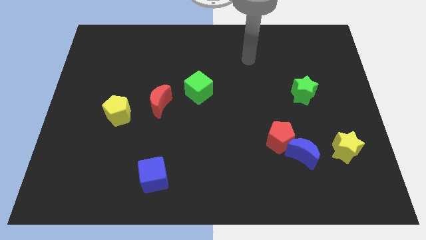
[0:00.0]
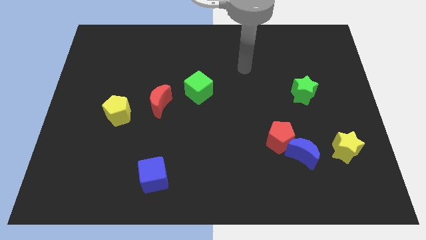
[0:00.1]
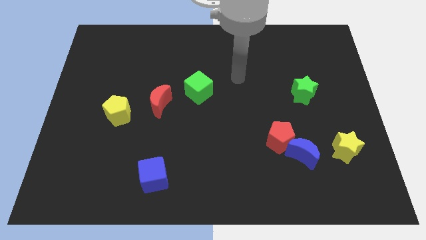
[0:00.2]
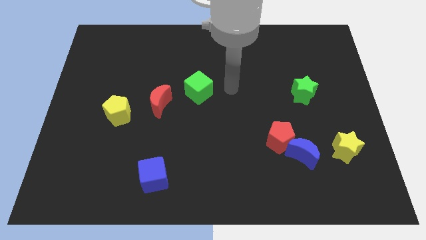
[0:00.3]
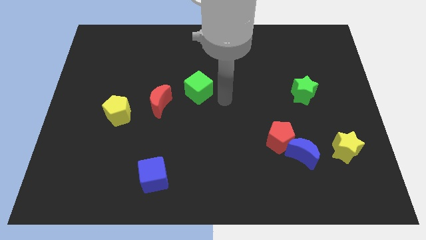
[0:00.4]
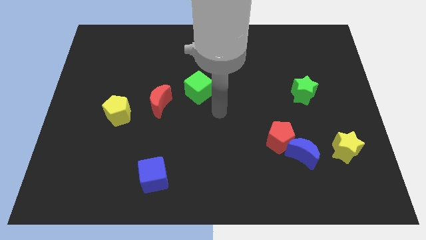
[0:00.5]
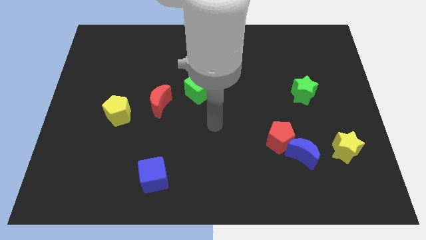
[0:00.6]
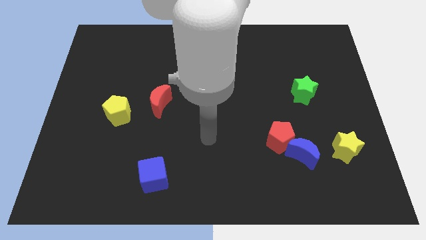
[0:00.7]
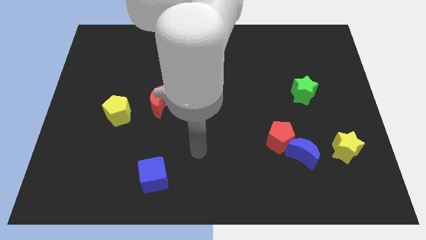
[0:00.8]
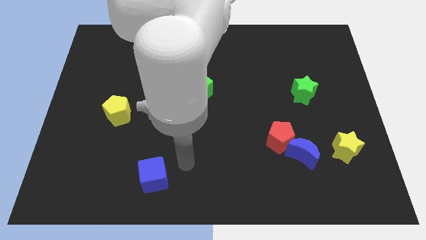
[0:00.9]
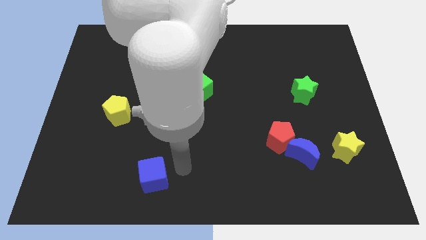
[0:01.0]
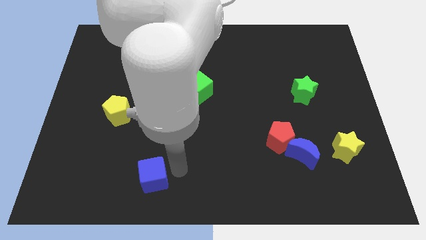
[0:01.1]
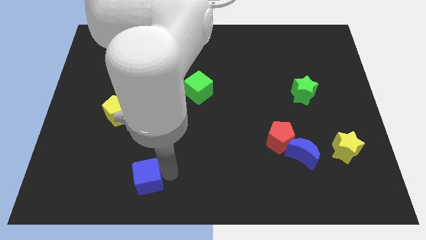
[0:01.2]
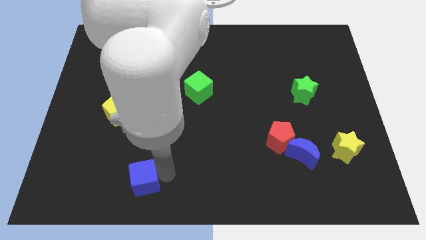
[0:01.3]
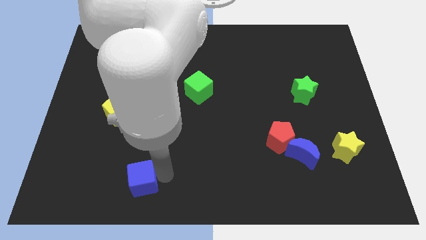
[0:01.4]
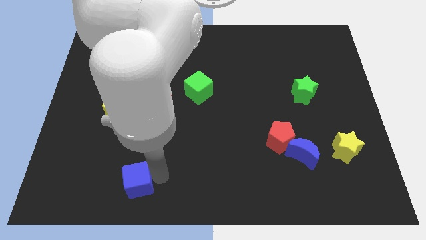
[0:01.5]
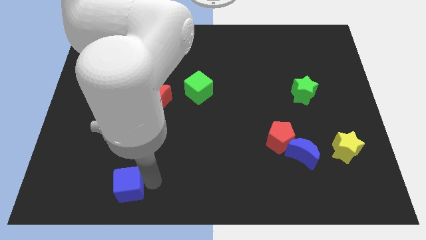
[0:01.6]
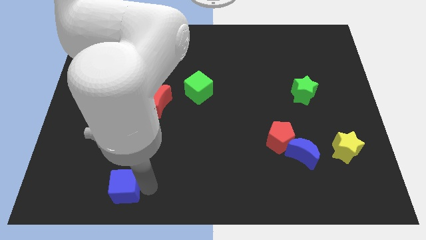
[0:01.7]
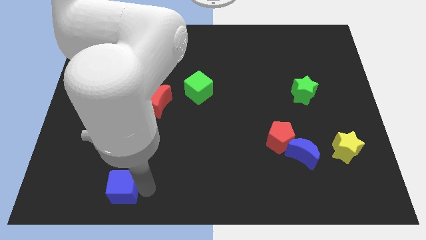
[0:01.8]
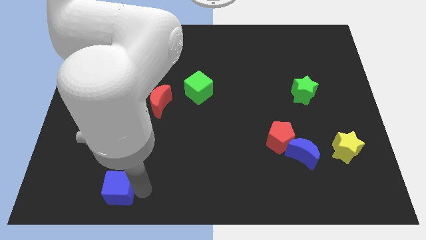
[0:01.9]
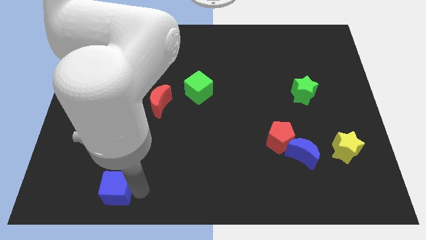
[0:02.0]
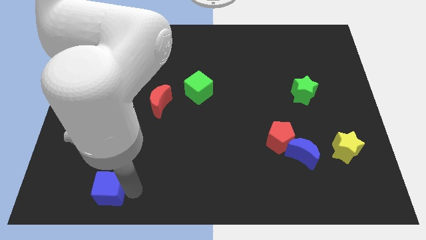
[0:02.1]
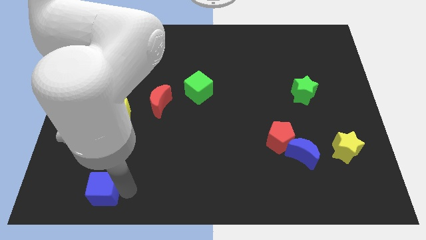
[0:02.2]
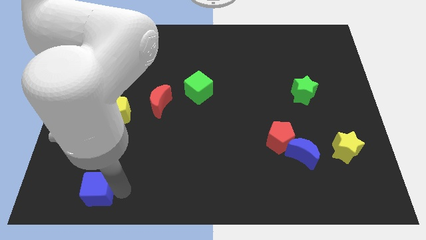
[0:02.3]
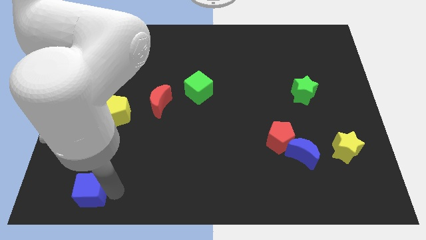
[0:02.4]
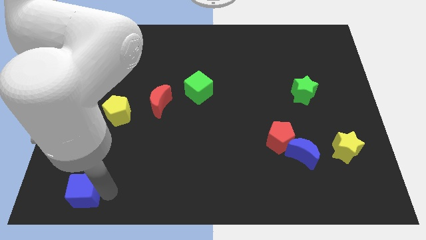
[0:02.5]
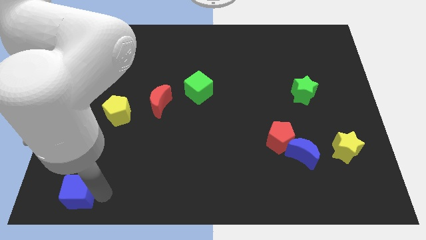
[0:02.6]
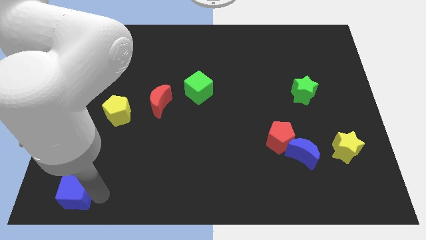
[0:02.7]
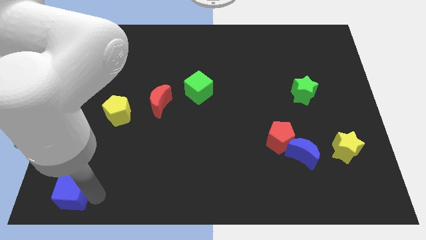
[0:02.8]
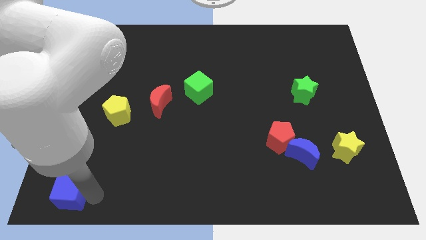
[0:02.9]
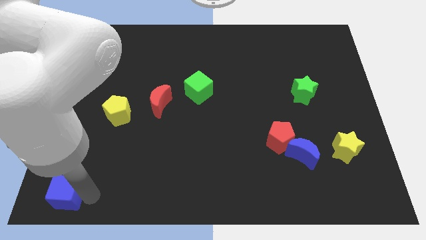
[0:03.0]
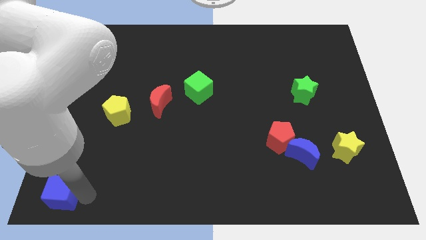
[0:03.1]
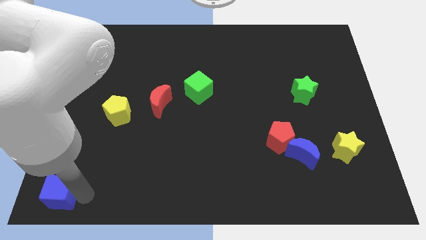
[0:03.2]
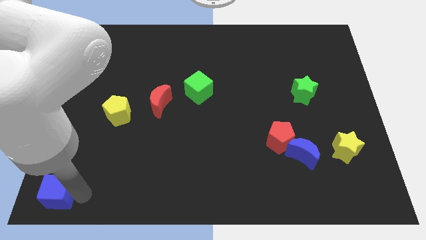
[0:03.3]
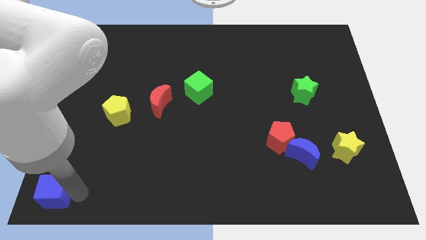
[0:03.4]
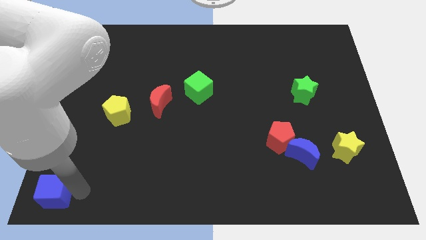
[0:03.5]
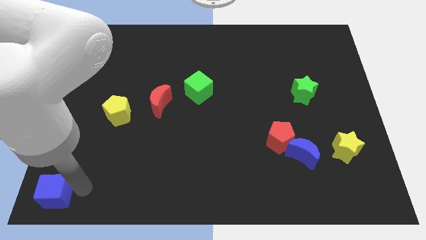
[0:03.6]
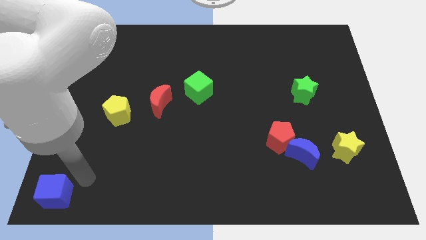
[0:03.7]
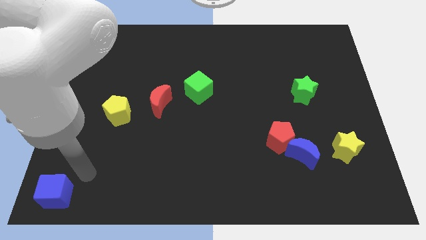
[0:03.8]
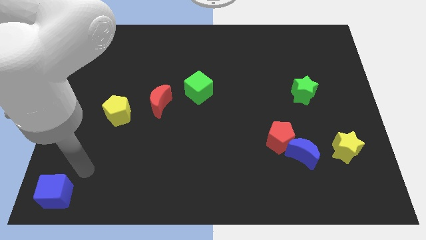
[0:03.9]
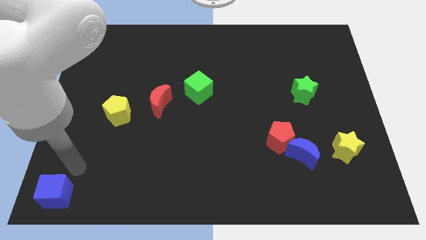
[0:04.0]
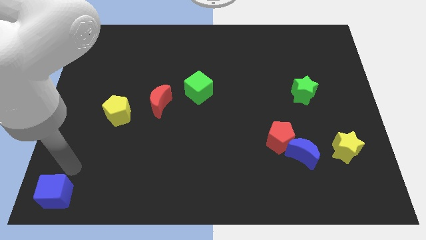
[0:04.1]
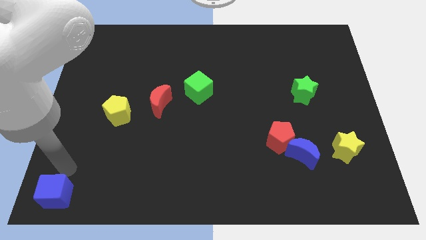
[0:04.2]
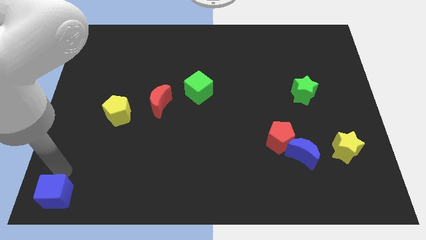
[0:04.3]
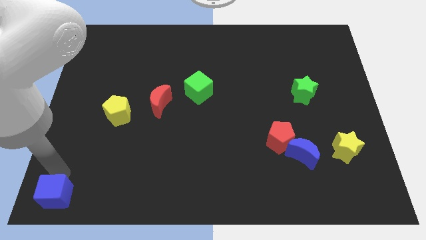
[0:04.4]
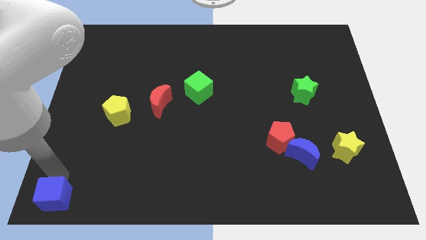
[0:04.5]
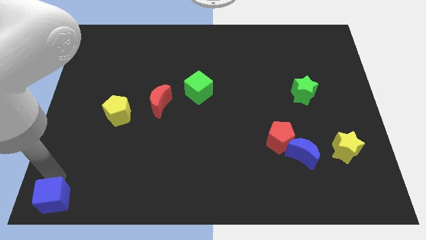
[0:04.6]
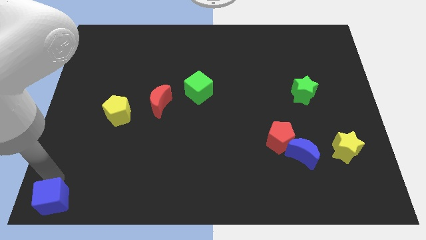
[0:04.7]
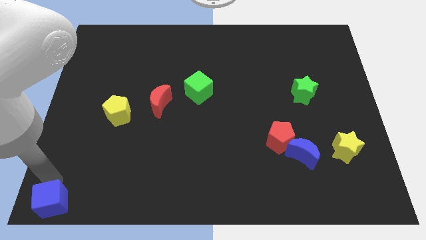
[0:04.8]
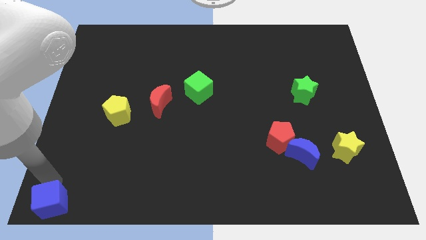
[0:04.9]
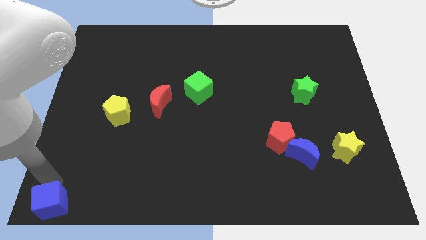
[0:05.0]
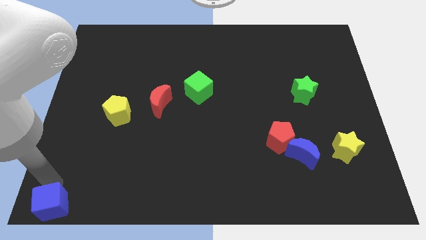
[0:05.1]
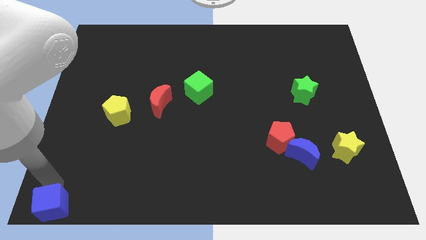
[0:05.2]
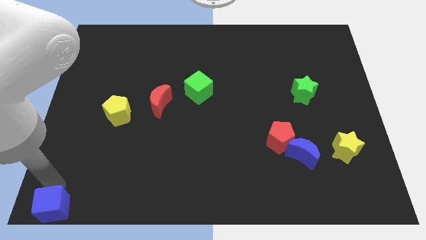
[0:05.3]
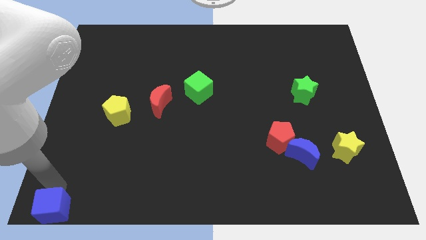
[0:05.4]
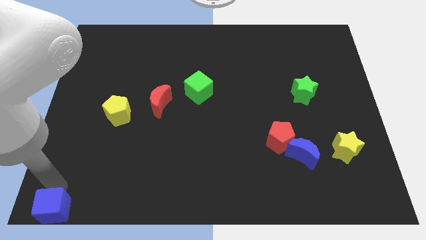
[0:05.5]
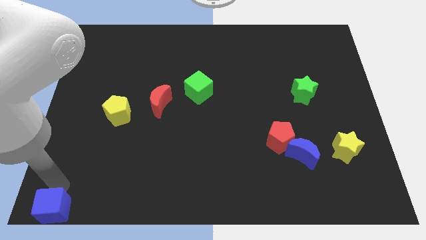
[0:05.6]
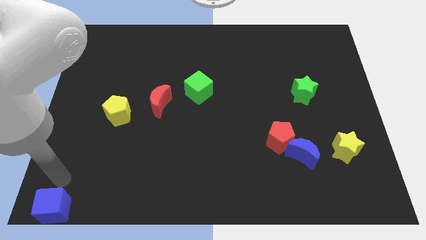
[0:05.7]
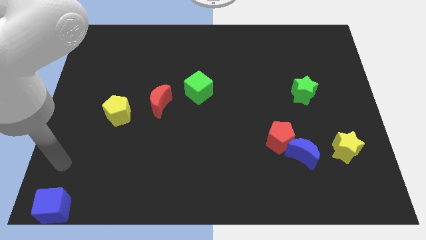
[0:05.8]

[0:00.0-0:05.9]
push the blue cube to the bottom left corner

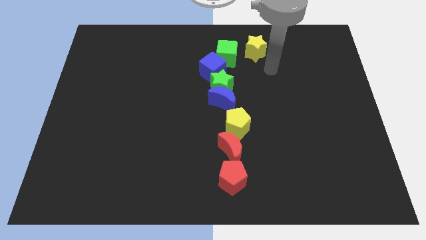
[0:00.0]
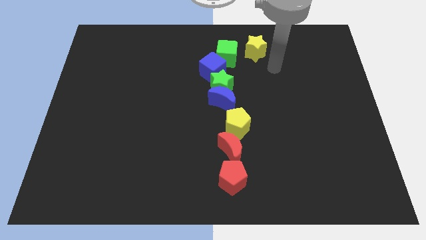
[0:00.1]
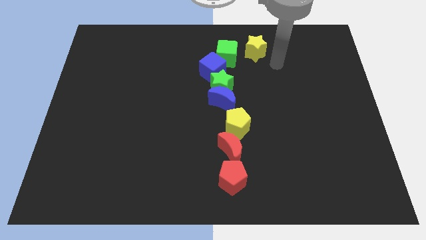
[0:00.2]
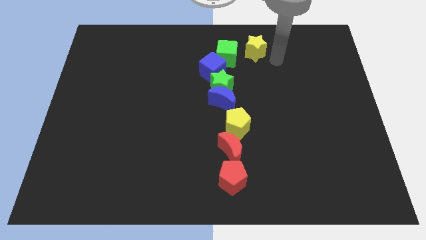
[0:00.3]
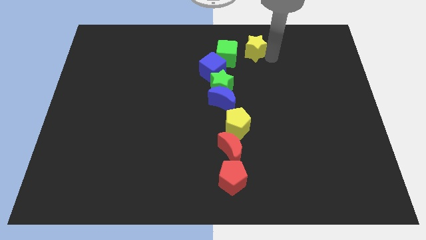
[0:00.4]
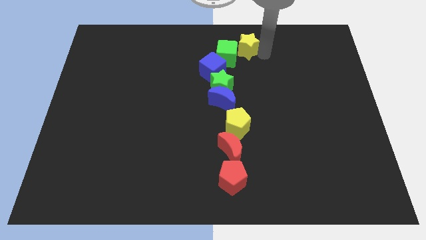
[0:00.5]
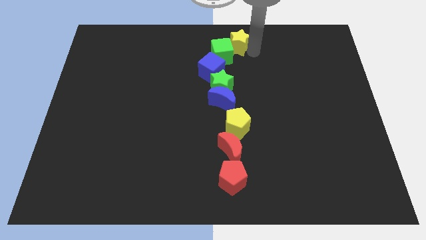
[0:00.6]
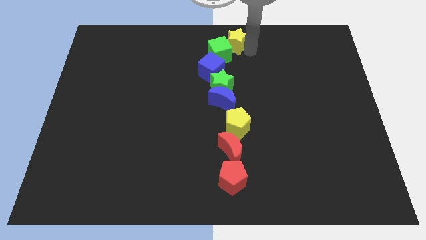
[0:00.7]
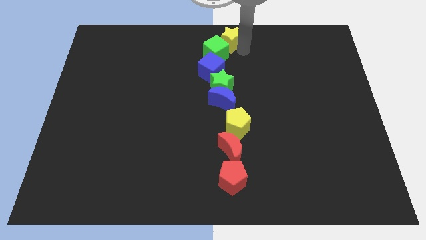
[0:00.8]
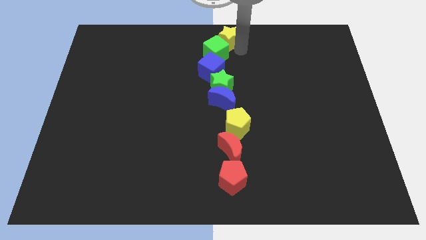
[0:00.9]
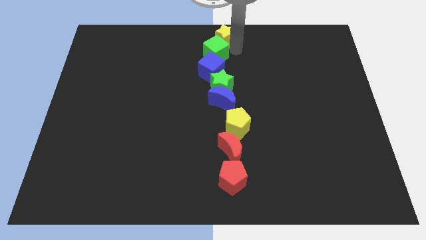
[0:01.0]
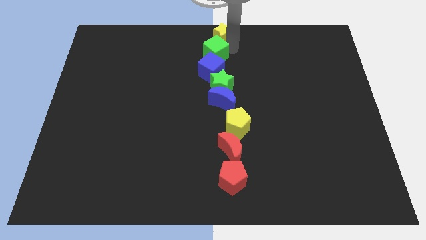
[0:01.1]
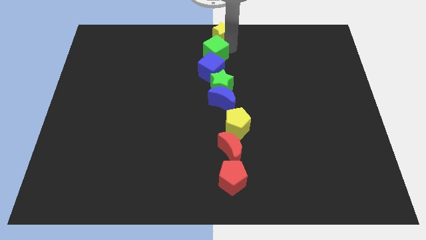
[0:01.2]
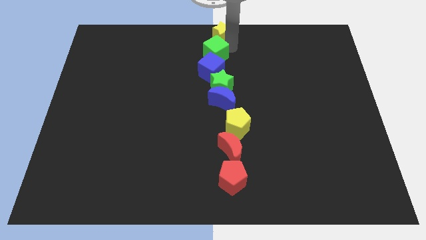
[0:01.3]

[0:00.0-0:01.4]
place the yellow star and the green cube at the top center

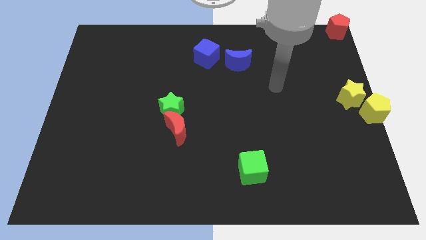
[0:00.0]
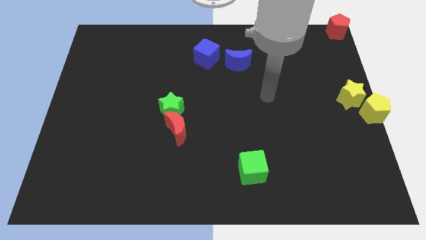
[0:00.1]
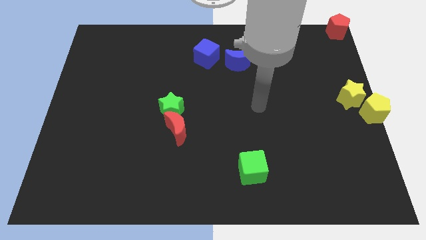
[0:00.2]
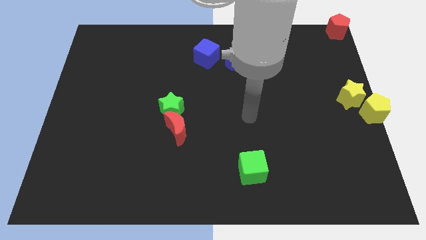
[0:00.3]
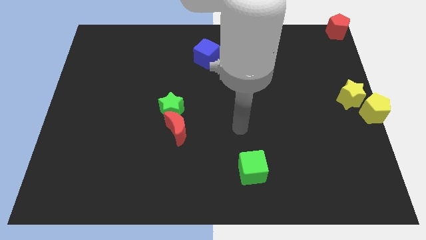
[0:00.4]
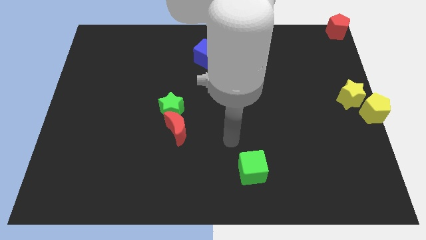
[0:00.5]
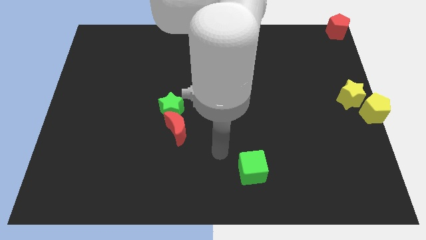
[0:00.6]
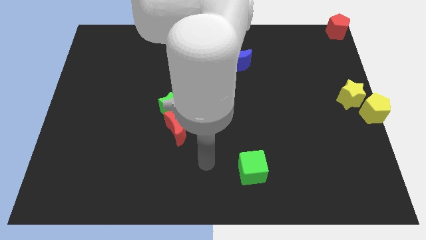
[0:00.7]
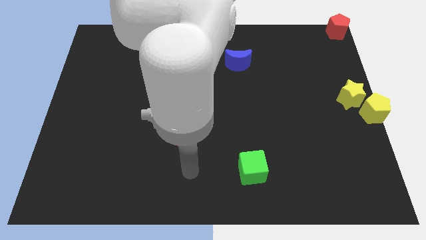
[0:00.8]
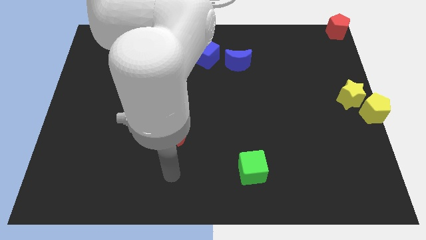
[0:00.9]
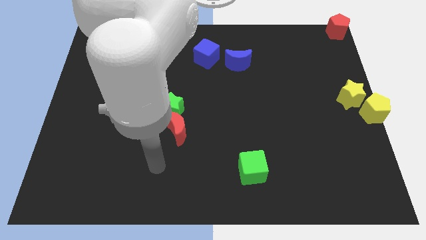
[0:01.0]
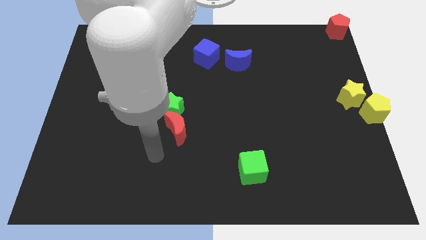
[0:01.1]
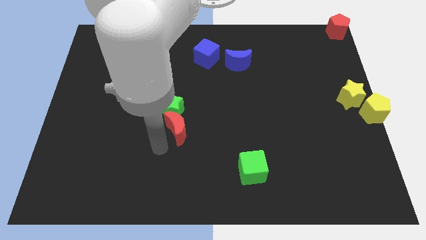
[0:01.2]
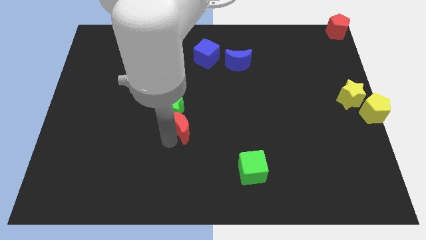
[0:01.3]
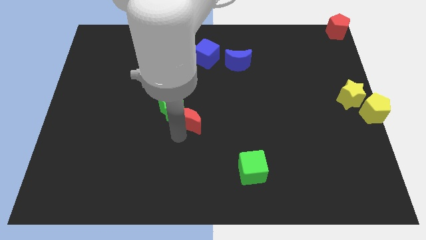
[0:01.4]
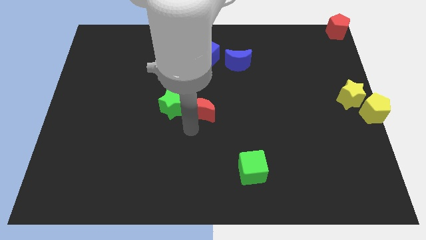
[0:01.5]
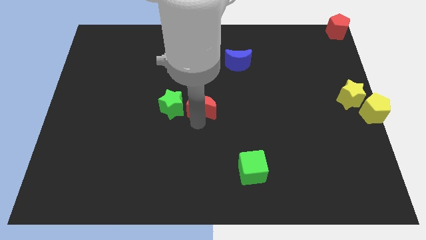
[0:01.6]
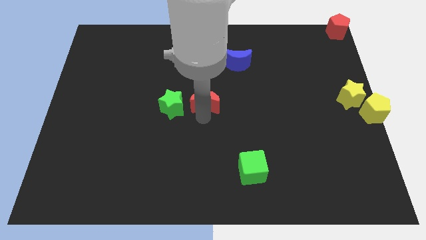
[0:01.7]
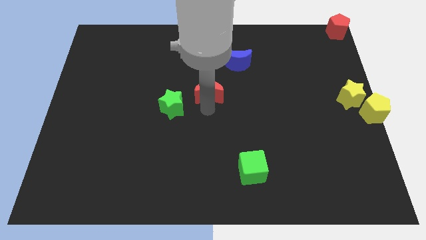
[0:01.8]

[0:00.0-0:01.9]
slide the red moon diagonally on the top left side of the green cube
